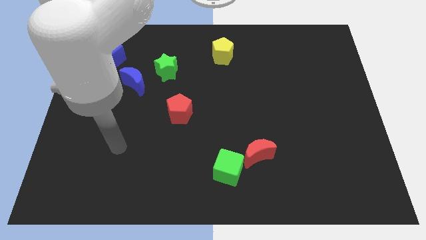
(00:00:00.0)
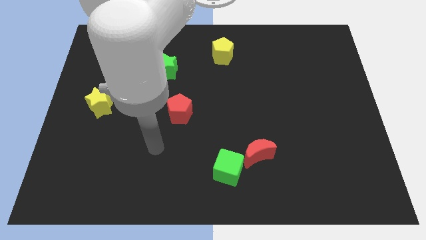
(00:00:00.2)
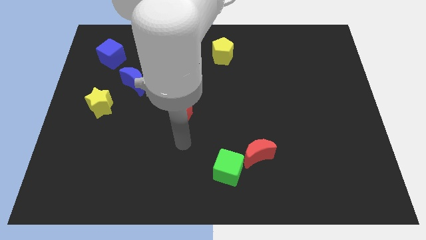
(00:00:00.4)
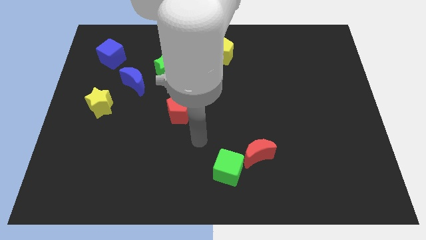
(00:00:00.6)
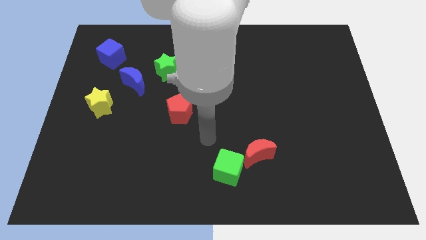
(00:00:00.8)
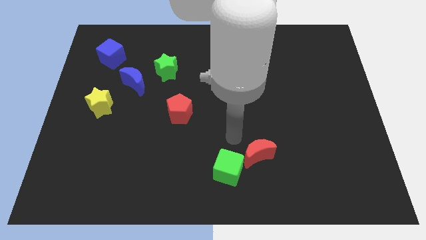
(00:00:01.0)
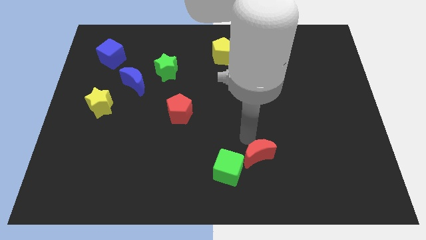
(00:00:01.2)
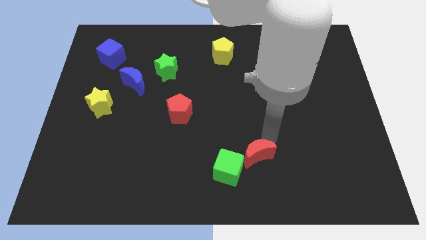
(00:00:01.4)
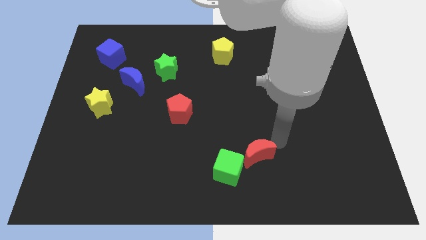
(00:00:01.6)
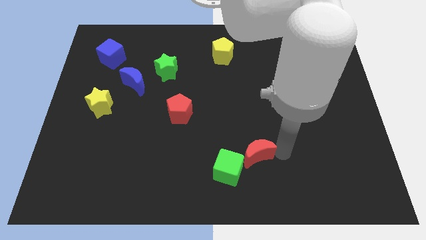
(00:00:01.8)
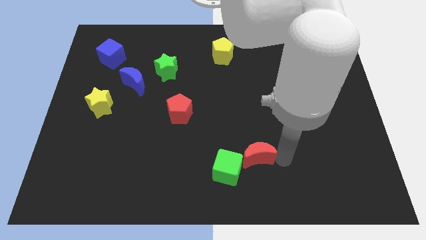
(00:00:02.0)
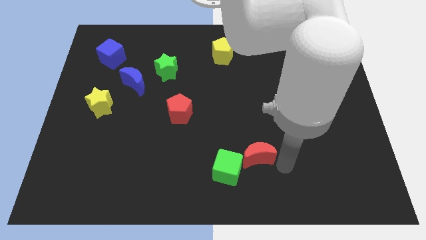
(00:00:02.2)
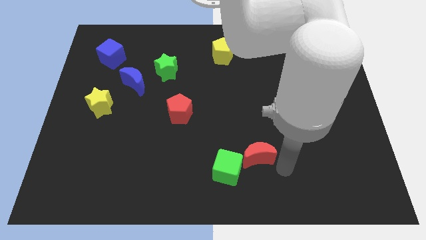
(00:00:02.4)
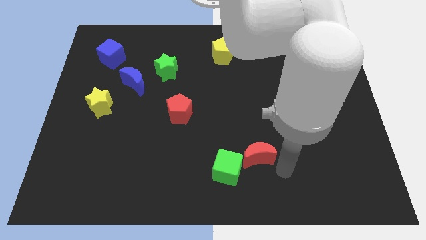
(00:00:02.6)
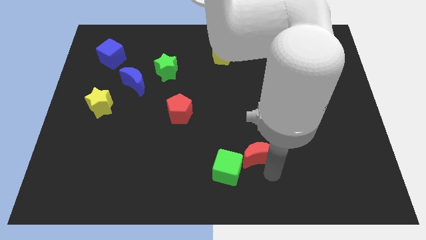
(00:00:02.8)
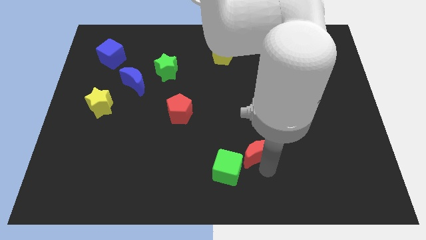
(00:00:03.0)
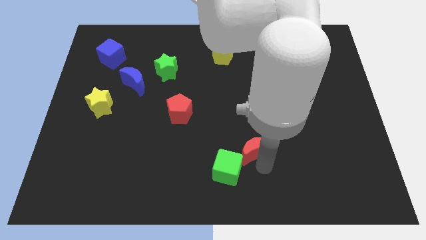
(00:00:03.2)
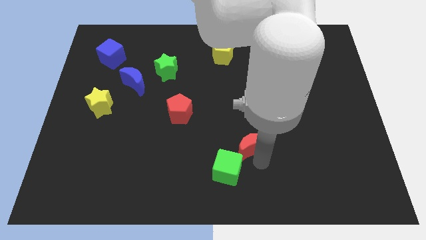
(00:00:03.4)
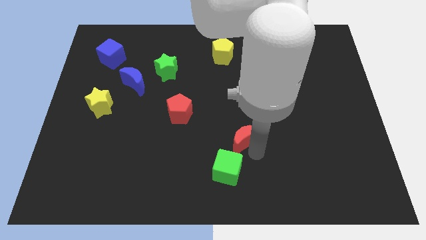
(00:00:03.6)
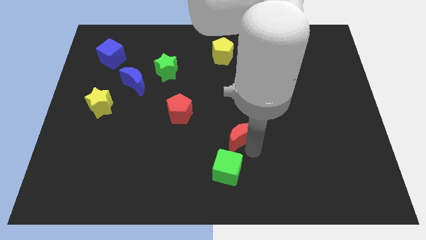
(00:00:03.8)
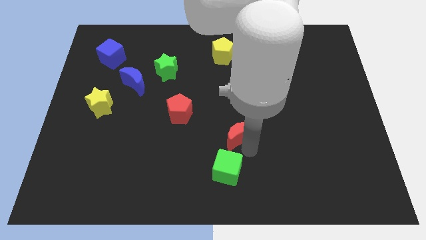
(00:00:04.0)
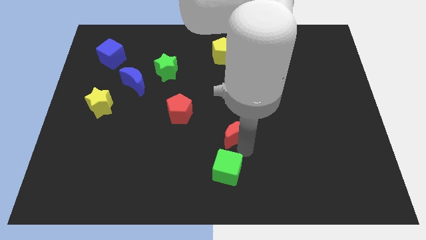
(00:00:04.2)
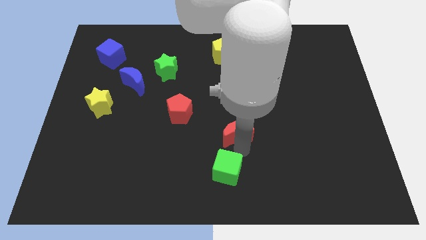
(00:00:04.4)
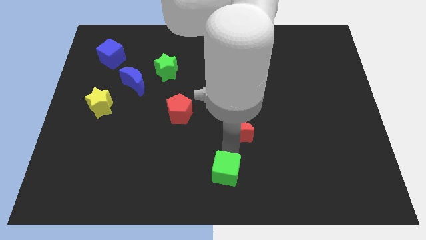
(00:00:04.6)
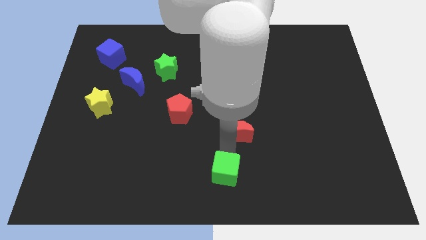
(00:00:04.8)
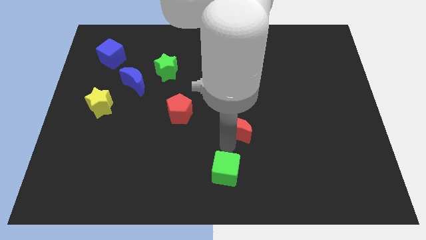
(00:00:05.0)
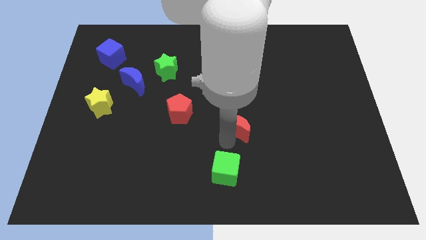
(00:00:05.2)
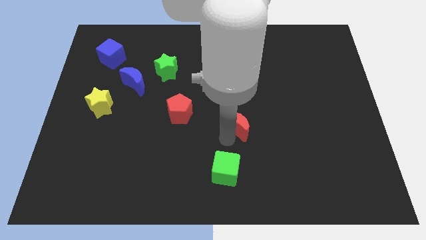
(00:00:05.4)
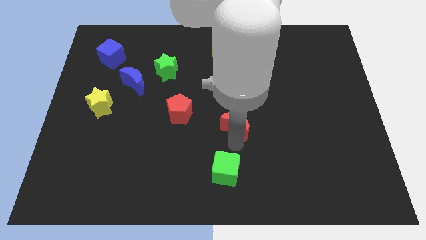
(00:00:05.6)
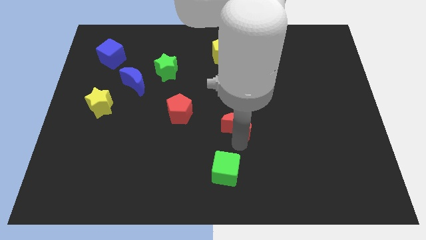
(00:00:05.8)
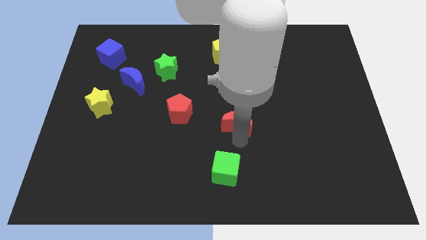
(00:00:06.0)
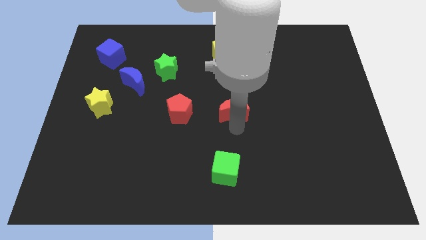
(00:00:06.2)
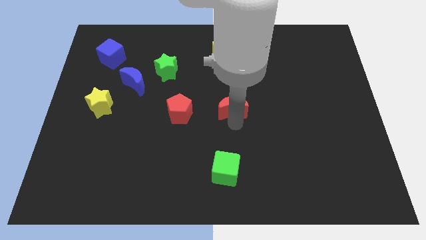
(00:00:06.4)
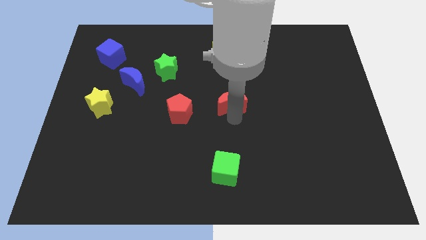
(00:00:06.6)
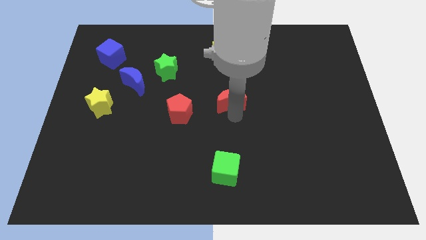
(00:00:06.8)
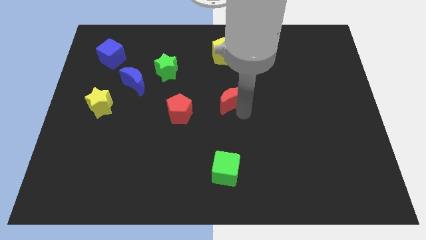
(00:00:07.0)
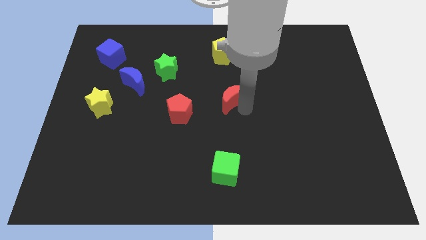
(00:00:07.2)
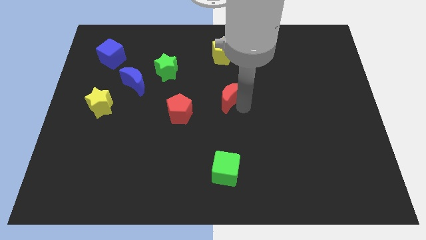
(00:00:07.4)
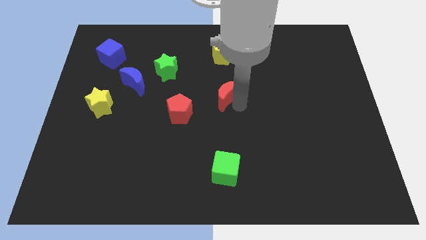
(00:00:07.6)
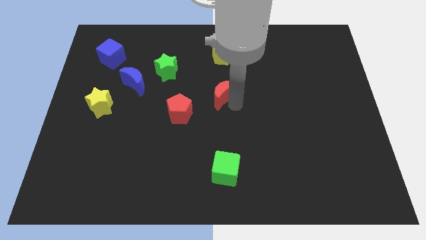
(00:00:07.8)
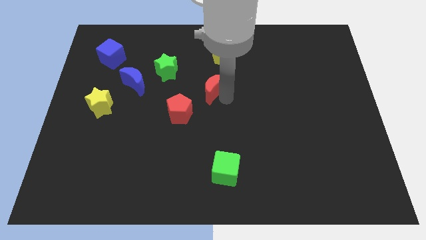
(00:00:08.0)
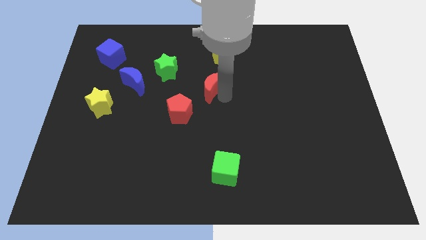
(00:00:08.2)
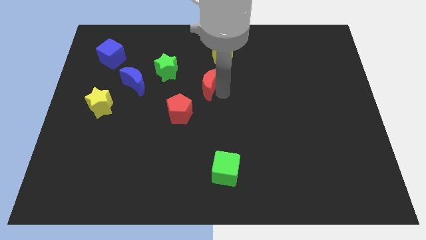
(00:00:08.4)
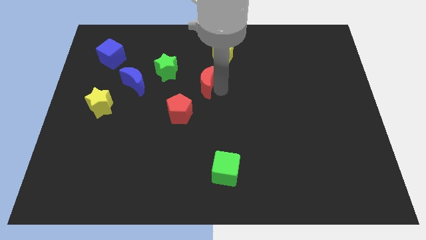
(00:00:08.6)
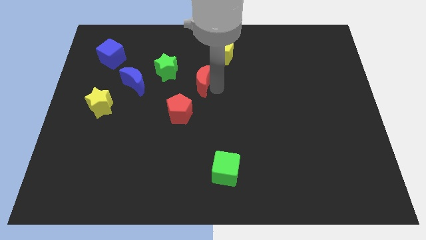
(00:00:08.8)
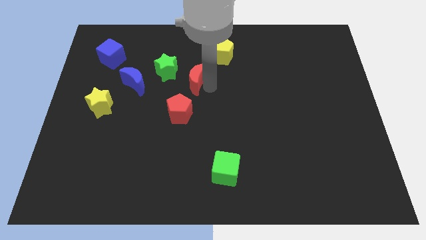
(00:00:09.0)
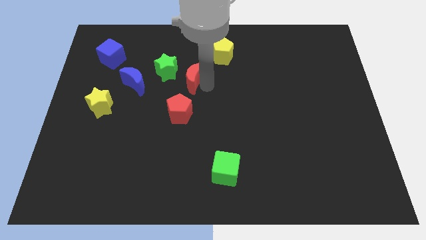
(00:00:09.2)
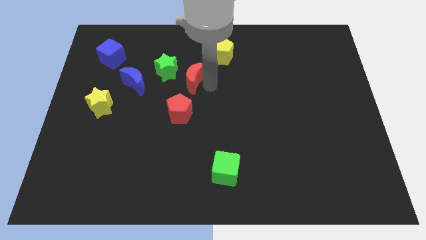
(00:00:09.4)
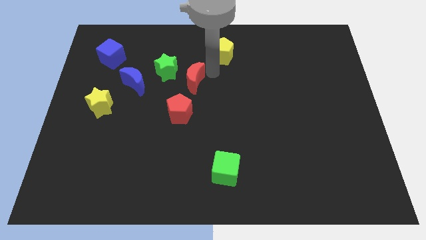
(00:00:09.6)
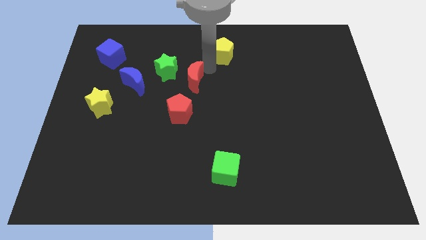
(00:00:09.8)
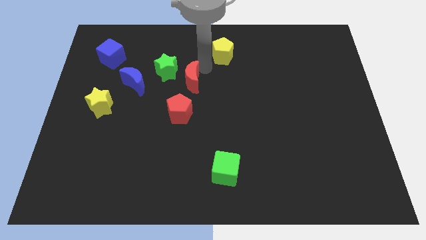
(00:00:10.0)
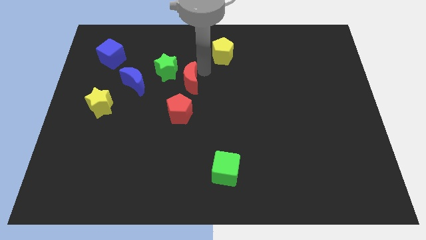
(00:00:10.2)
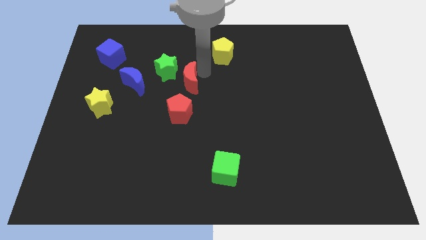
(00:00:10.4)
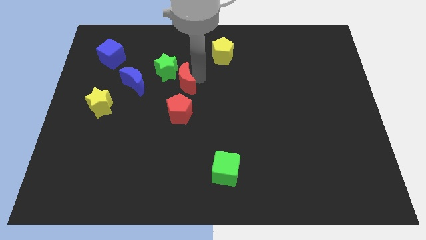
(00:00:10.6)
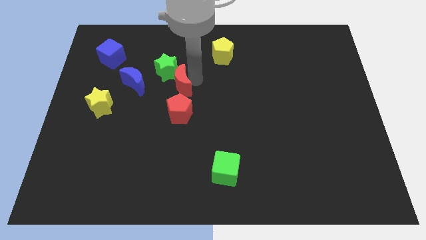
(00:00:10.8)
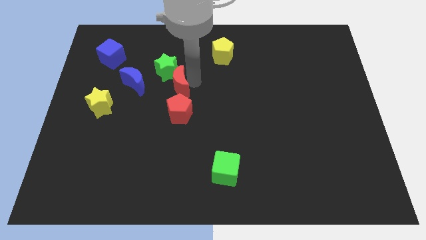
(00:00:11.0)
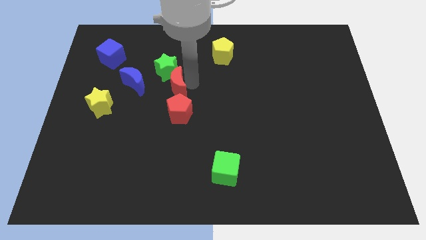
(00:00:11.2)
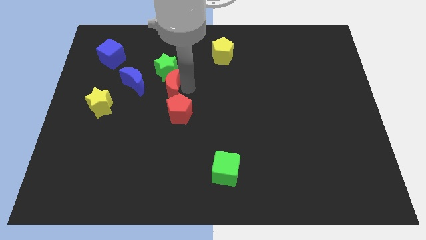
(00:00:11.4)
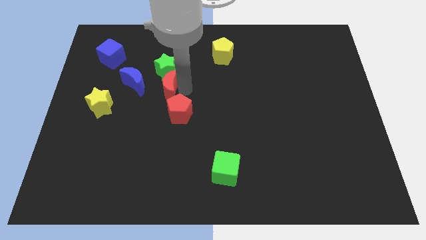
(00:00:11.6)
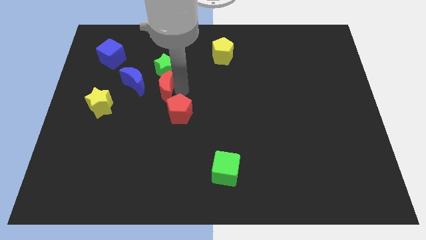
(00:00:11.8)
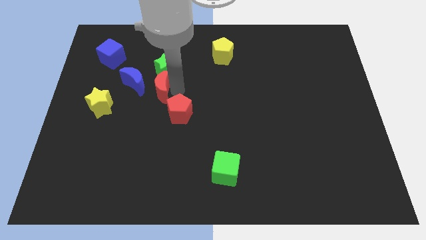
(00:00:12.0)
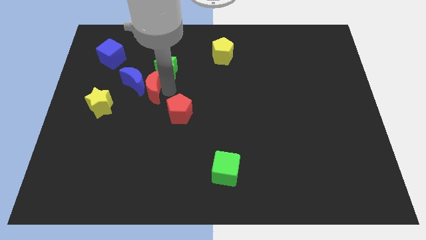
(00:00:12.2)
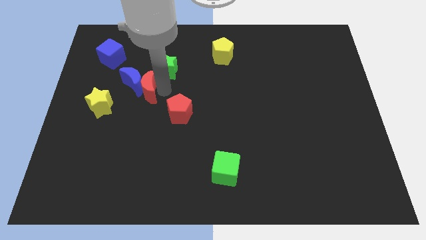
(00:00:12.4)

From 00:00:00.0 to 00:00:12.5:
slide the red moon to the blue moon

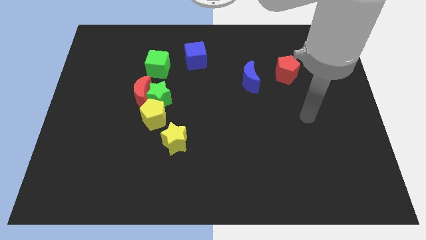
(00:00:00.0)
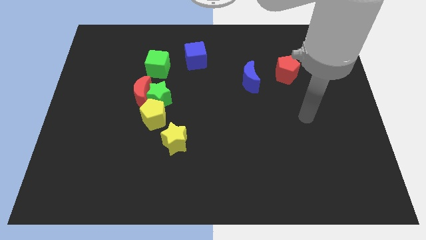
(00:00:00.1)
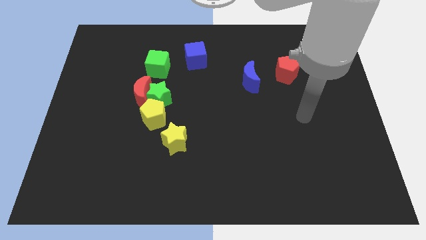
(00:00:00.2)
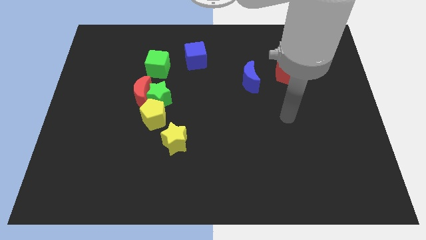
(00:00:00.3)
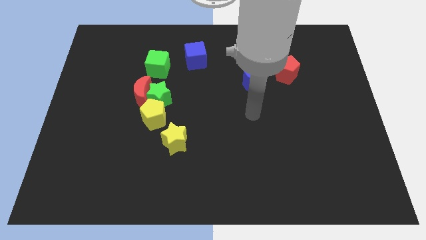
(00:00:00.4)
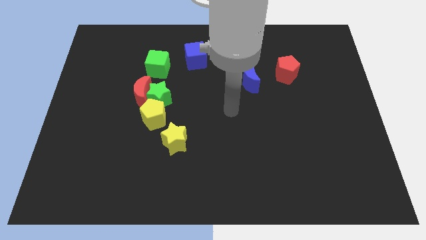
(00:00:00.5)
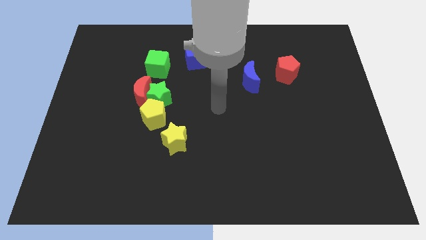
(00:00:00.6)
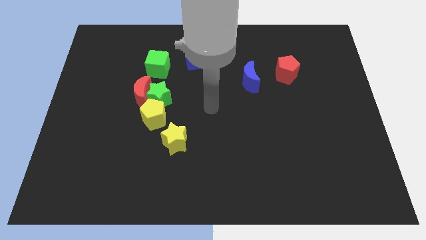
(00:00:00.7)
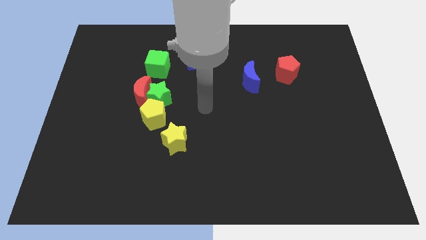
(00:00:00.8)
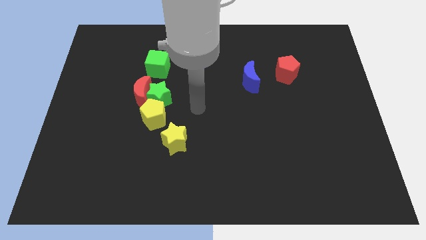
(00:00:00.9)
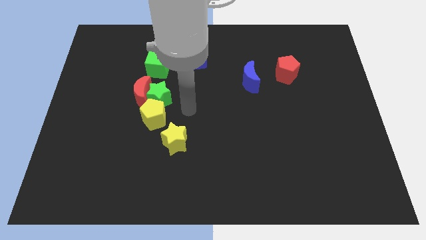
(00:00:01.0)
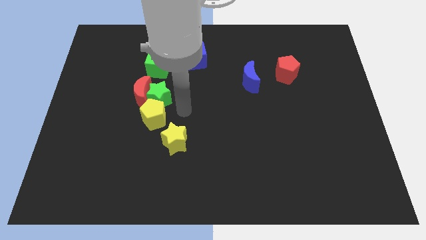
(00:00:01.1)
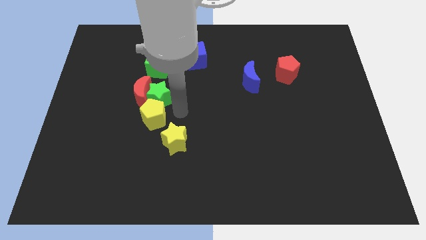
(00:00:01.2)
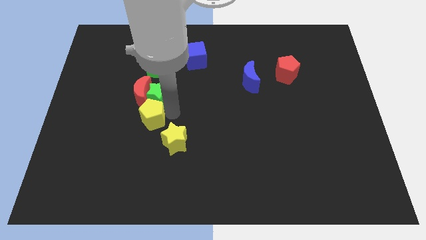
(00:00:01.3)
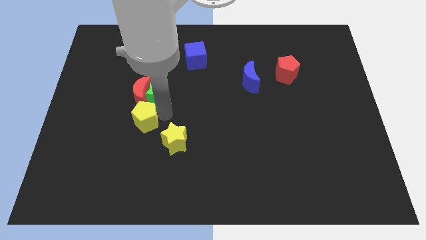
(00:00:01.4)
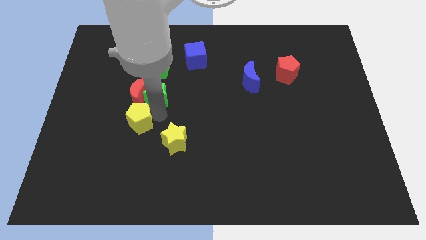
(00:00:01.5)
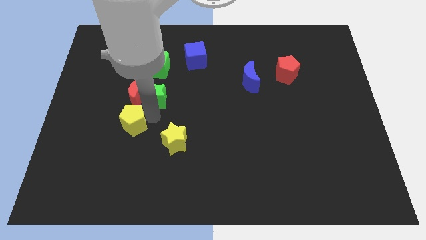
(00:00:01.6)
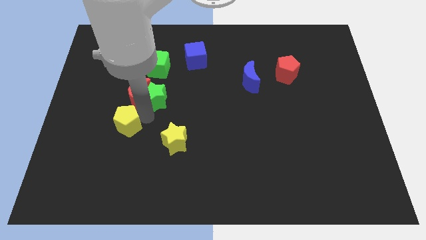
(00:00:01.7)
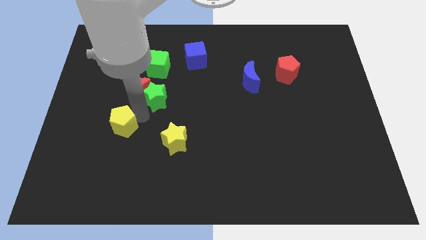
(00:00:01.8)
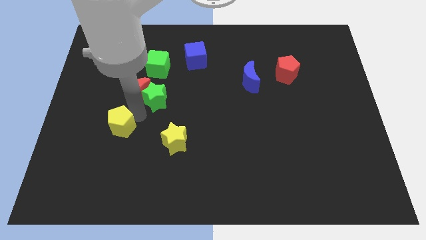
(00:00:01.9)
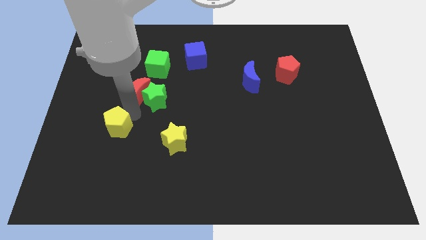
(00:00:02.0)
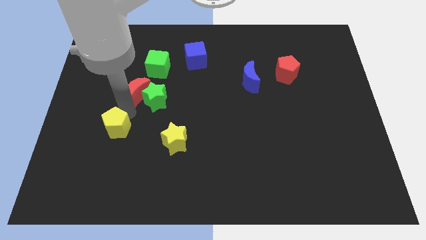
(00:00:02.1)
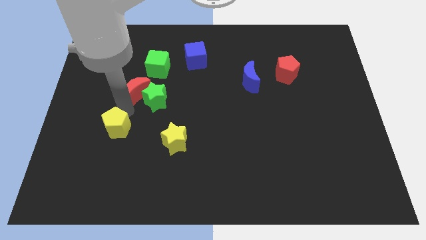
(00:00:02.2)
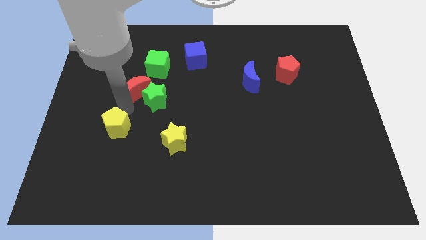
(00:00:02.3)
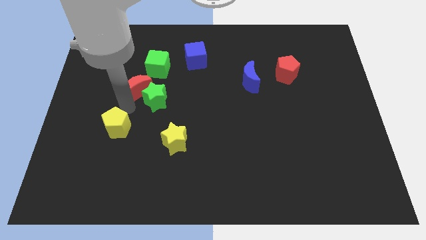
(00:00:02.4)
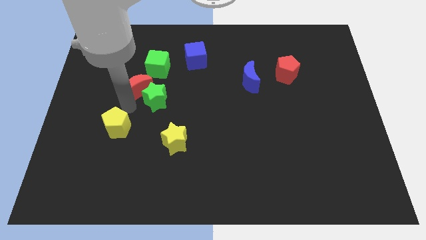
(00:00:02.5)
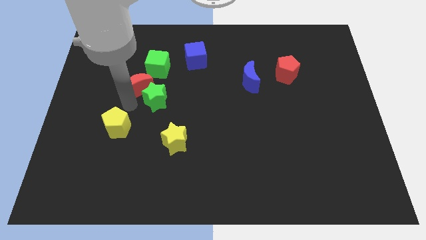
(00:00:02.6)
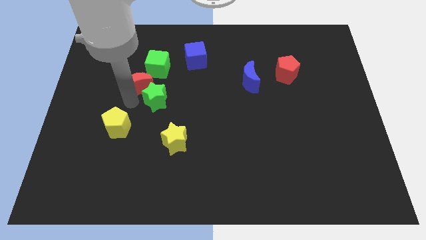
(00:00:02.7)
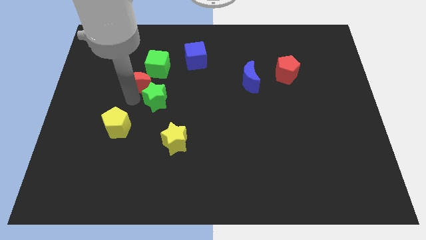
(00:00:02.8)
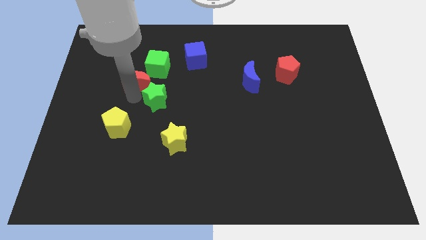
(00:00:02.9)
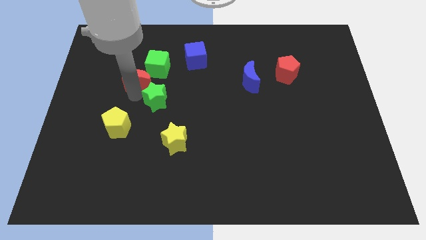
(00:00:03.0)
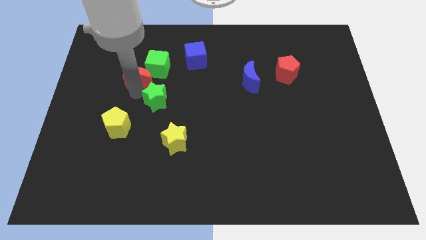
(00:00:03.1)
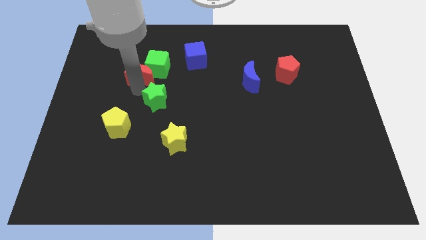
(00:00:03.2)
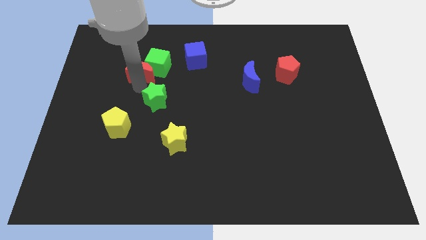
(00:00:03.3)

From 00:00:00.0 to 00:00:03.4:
slide the red moon to the green cube
